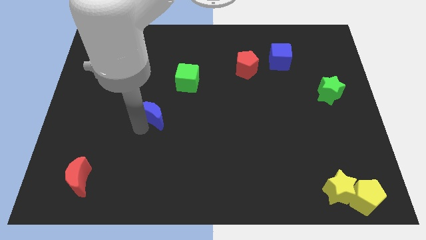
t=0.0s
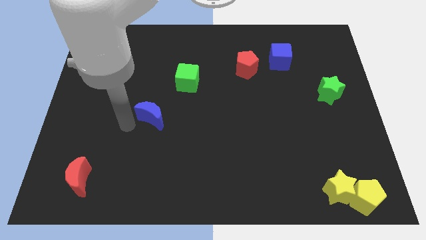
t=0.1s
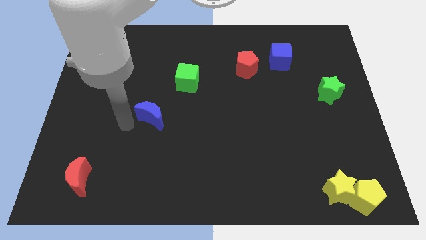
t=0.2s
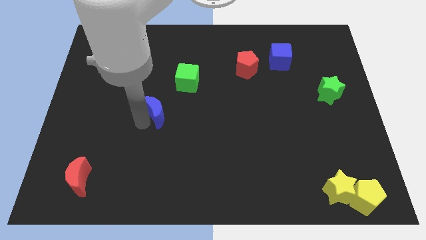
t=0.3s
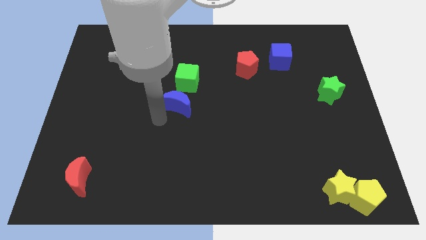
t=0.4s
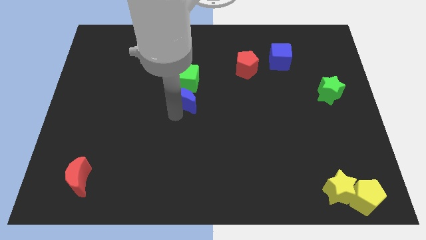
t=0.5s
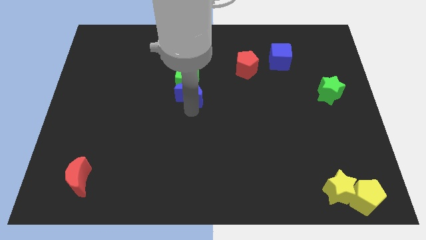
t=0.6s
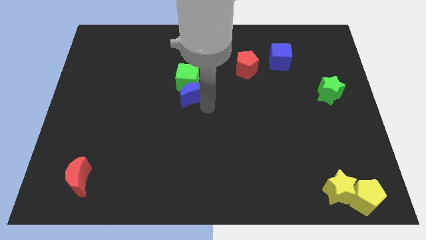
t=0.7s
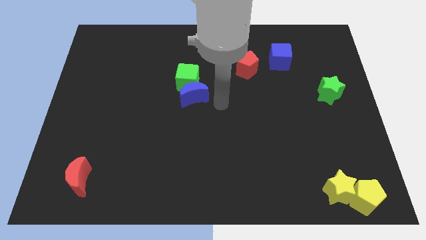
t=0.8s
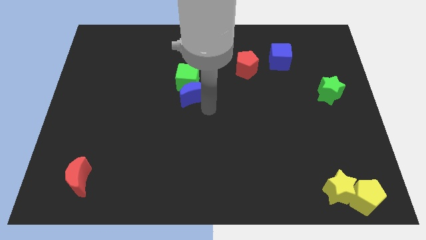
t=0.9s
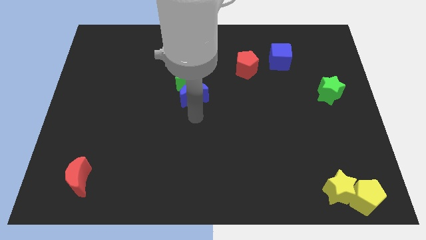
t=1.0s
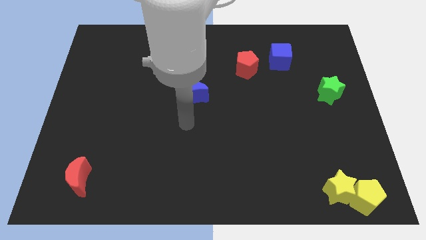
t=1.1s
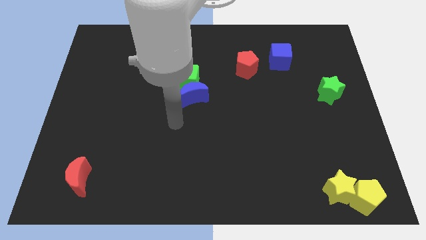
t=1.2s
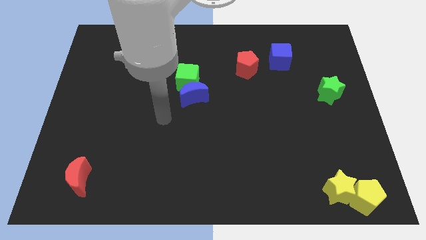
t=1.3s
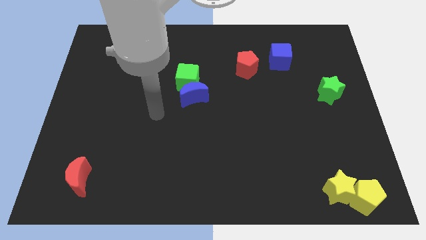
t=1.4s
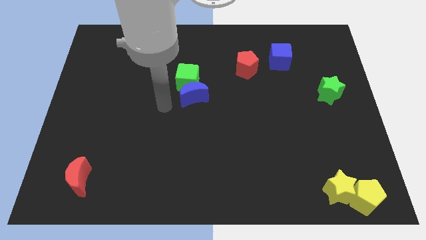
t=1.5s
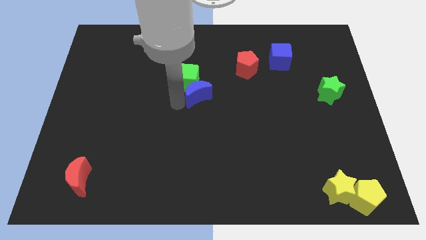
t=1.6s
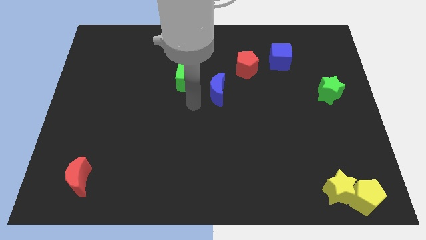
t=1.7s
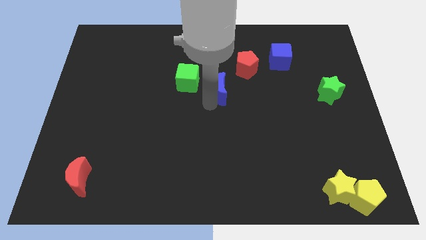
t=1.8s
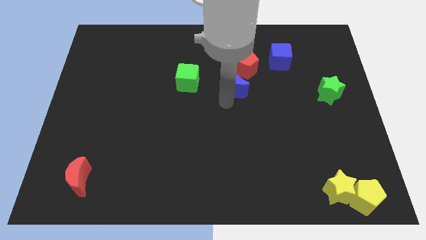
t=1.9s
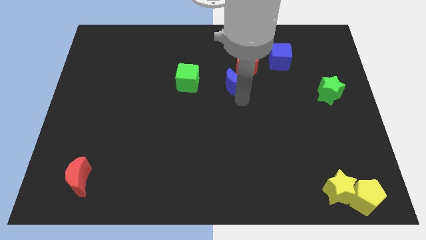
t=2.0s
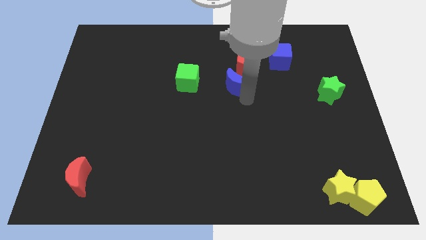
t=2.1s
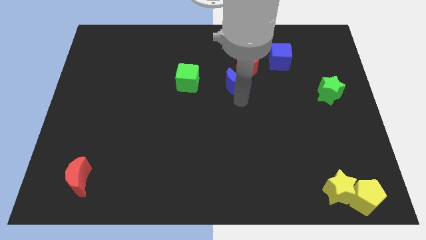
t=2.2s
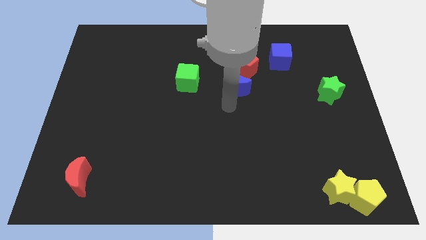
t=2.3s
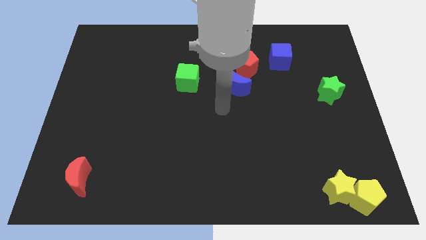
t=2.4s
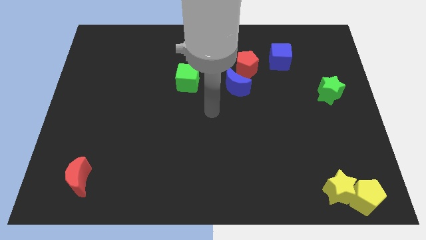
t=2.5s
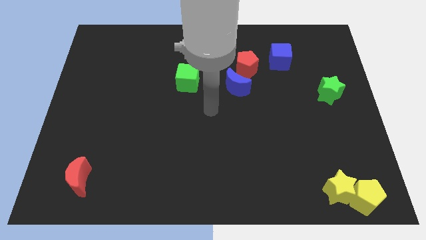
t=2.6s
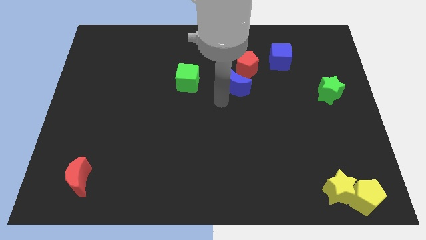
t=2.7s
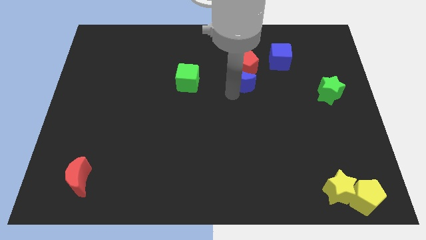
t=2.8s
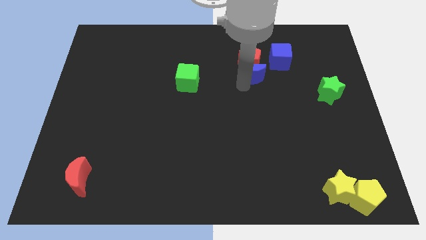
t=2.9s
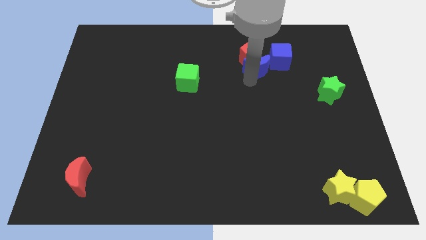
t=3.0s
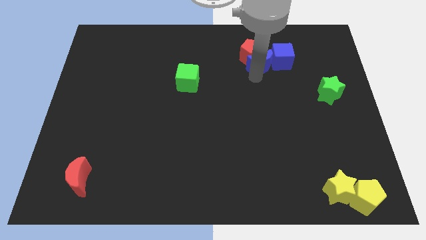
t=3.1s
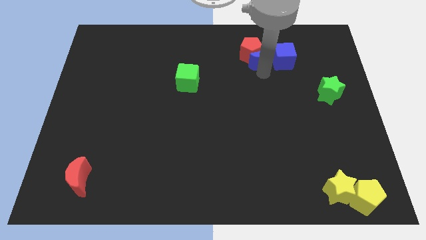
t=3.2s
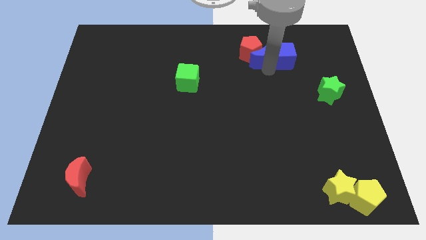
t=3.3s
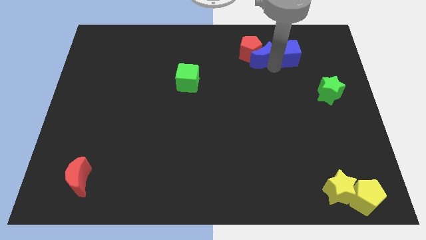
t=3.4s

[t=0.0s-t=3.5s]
place the blue moon between blue cube and red pentagon

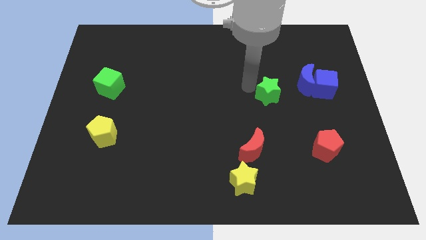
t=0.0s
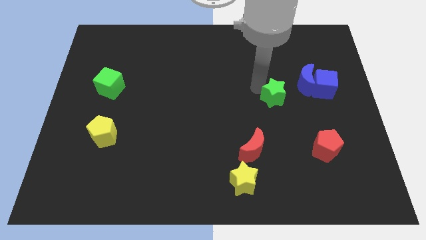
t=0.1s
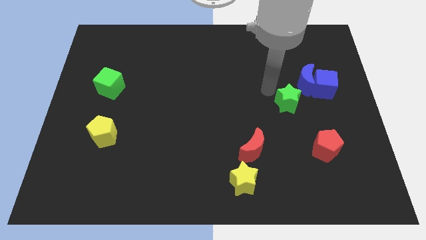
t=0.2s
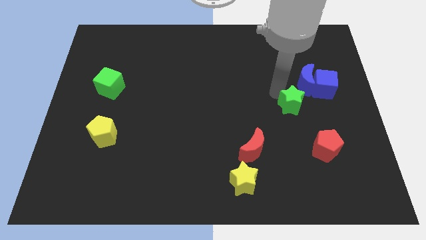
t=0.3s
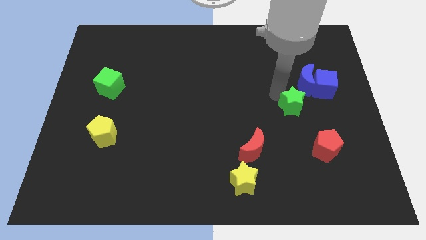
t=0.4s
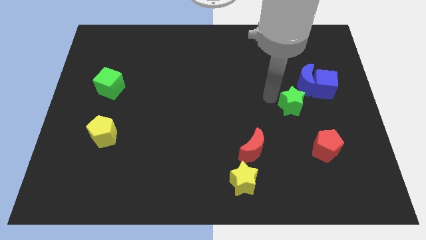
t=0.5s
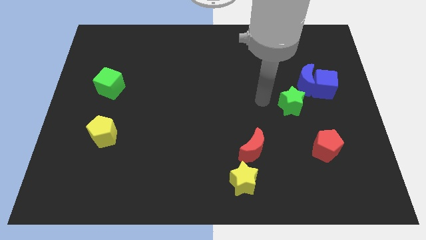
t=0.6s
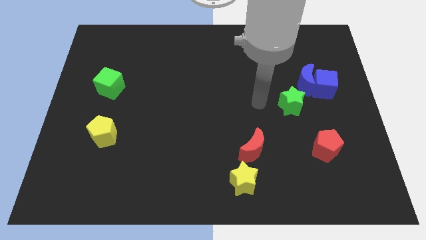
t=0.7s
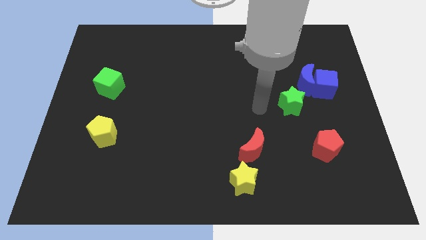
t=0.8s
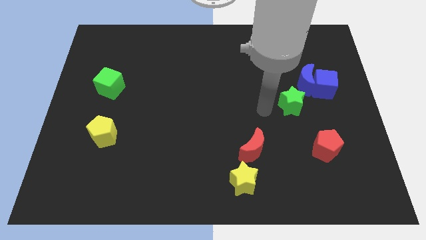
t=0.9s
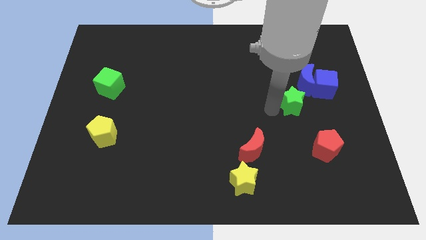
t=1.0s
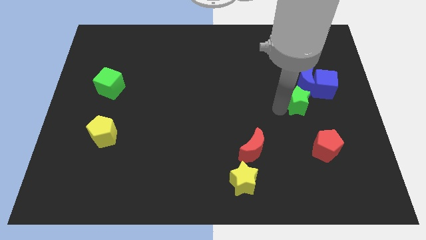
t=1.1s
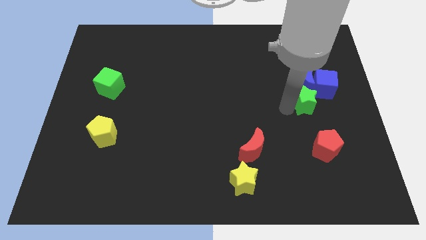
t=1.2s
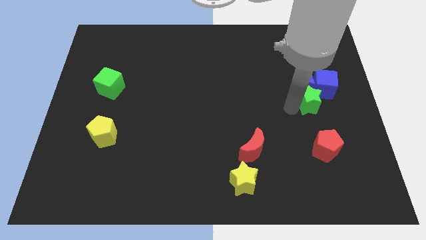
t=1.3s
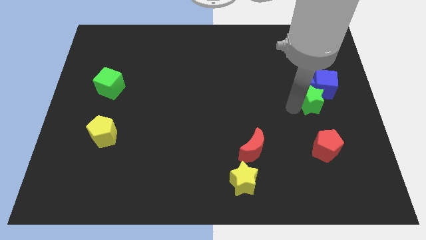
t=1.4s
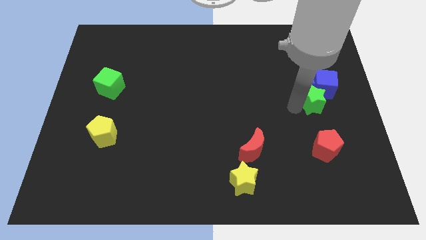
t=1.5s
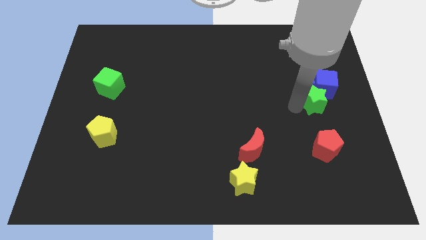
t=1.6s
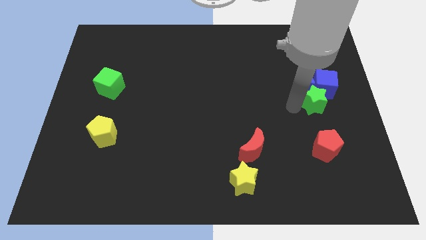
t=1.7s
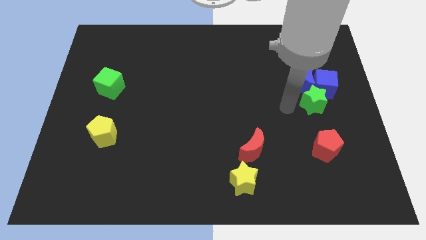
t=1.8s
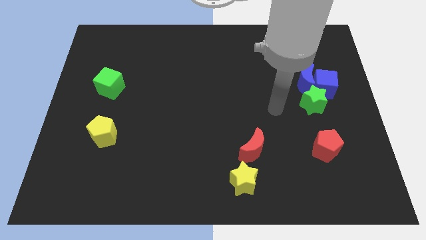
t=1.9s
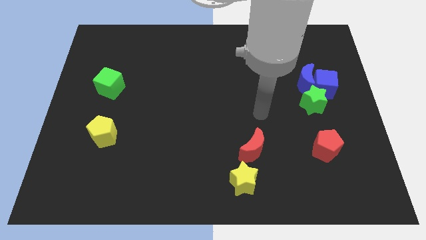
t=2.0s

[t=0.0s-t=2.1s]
put the green star above the red pentagon

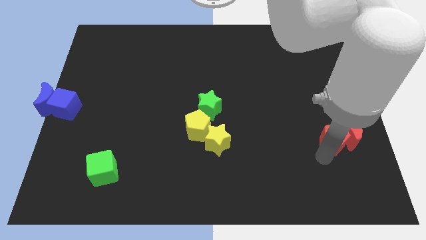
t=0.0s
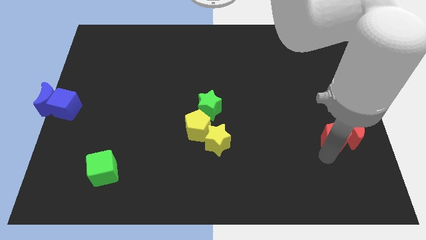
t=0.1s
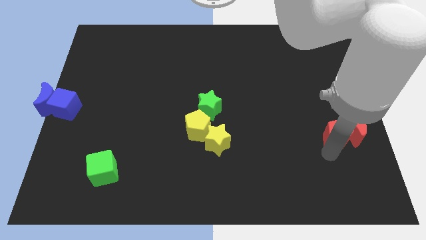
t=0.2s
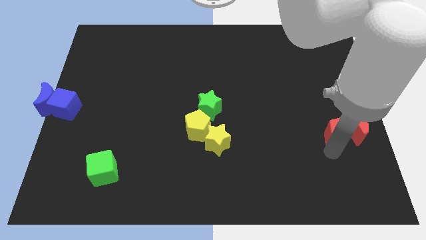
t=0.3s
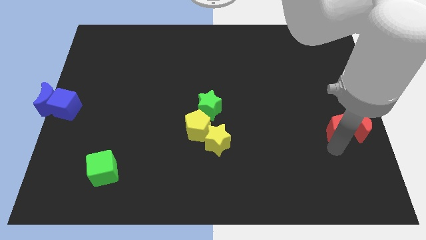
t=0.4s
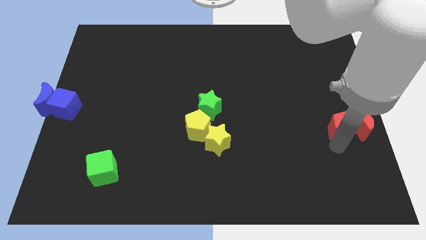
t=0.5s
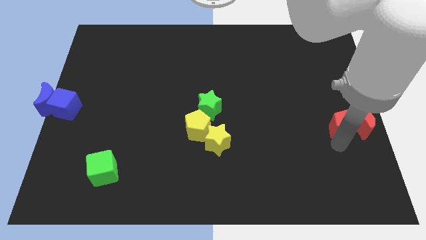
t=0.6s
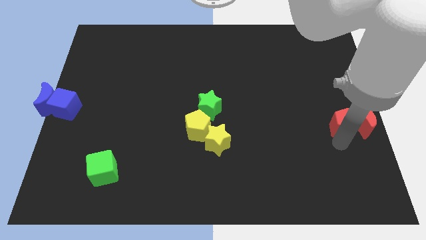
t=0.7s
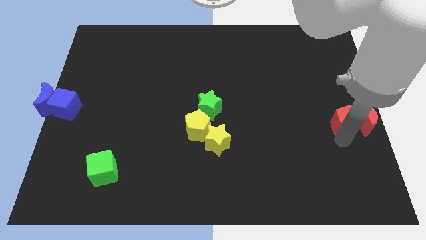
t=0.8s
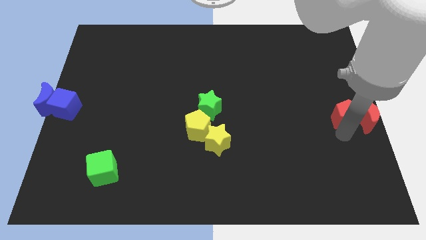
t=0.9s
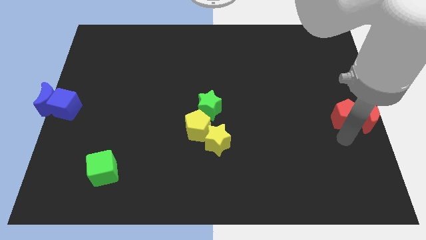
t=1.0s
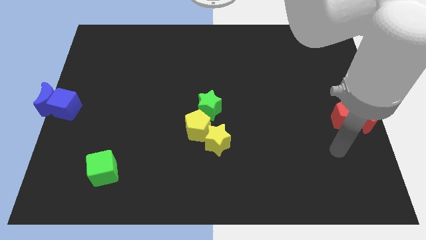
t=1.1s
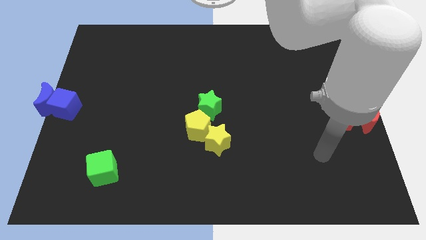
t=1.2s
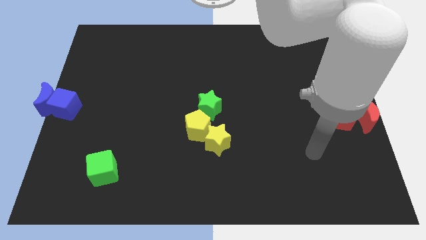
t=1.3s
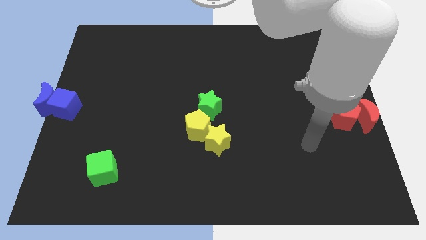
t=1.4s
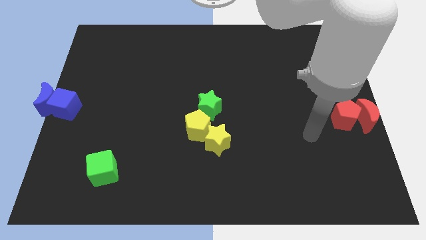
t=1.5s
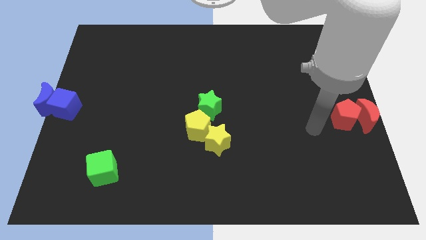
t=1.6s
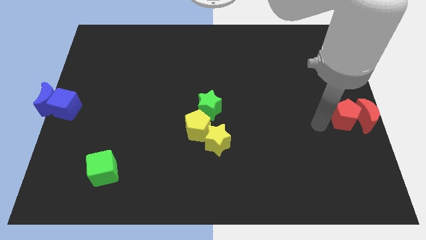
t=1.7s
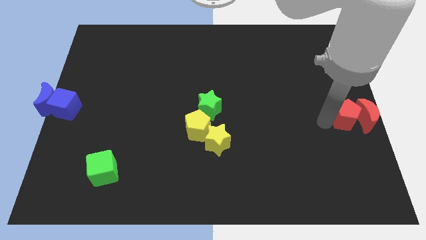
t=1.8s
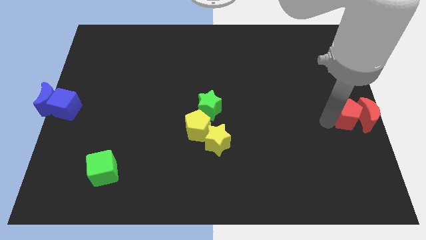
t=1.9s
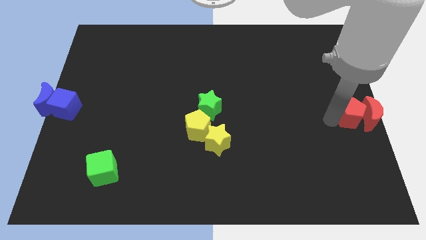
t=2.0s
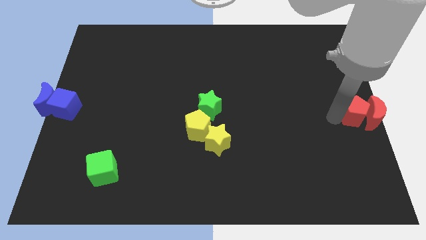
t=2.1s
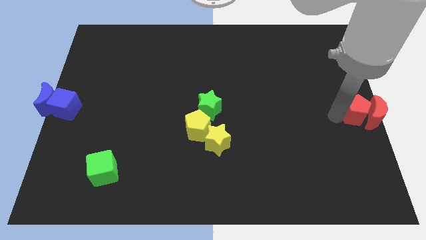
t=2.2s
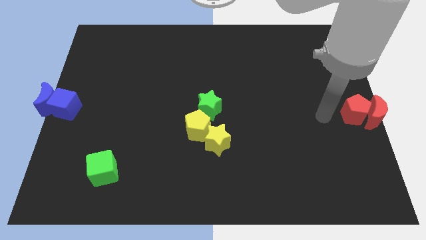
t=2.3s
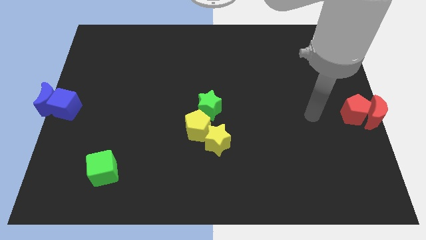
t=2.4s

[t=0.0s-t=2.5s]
place the red pentagon and red crescent at the right center of the board

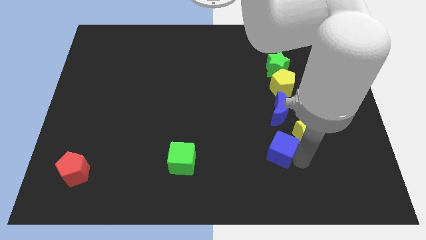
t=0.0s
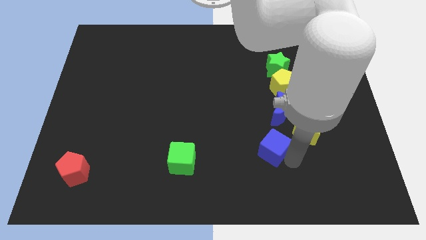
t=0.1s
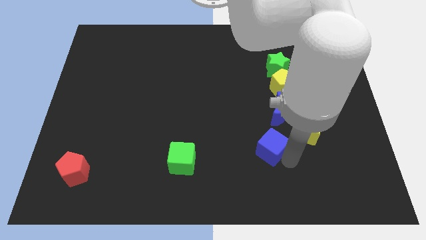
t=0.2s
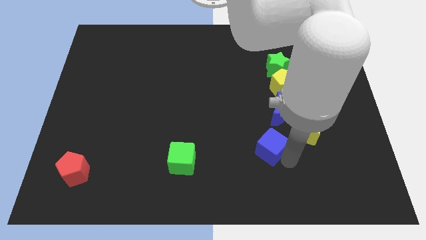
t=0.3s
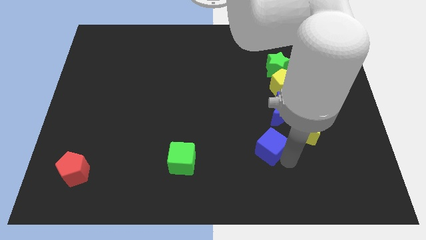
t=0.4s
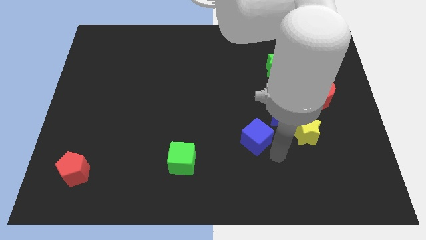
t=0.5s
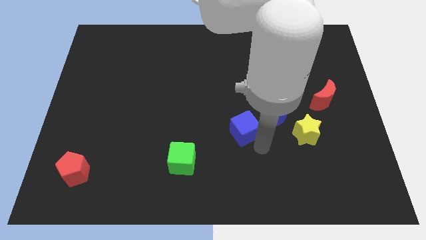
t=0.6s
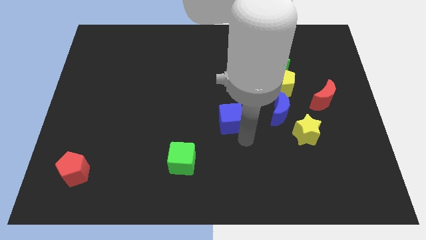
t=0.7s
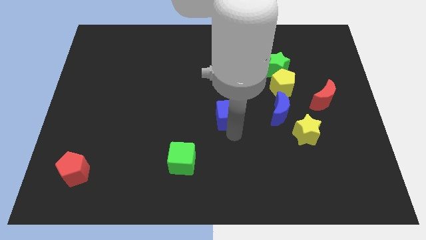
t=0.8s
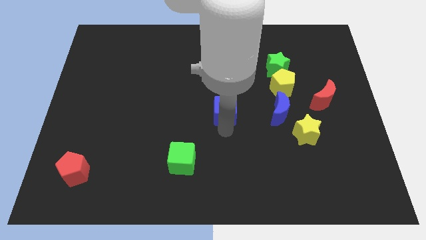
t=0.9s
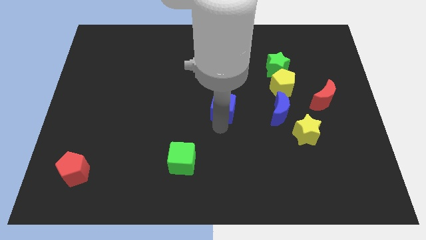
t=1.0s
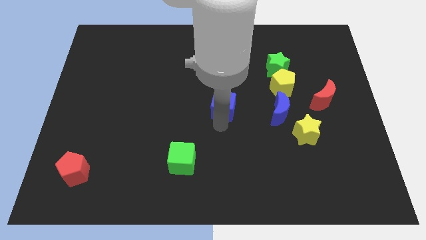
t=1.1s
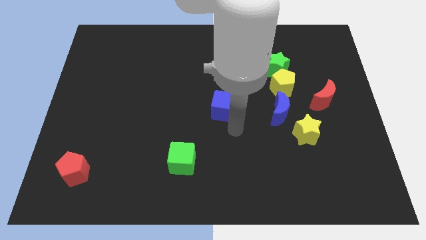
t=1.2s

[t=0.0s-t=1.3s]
place the blue cube parallel to the blue crescent
